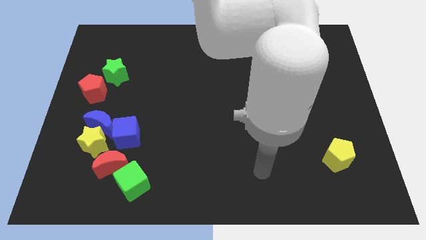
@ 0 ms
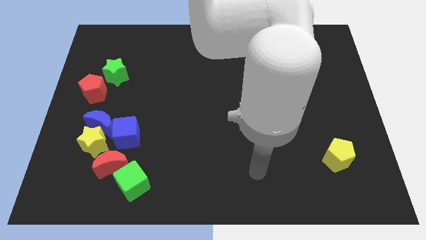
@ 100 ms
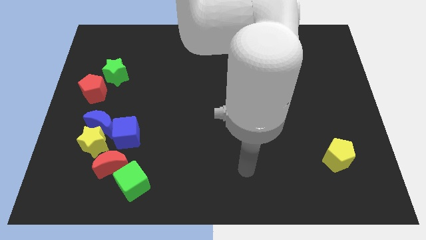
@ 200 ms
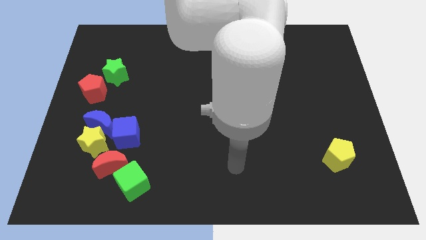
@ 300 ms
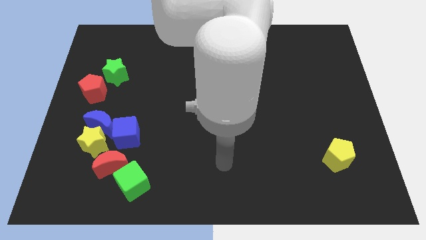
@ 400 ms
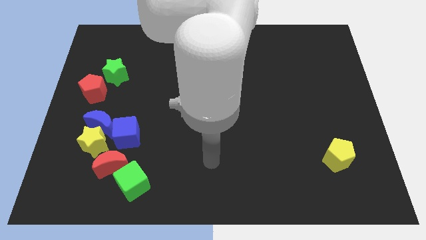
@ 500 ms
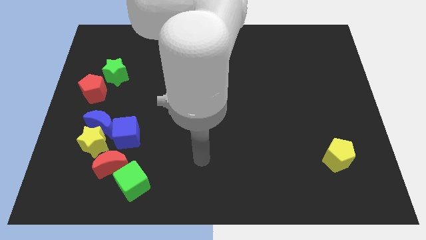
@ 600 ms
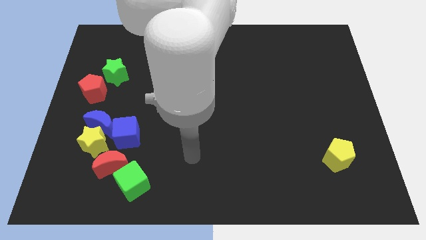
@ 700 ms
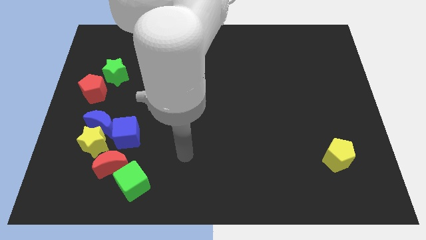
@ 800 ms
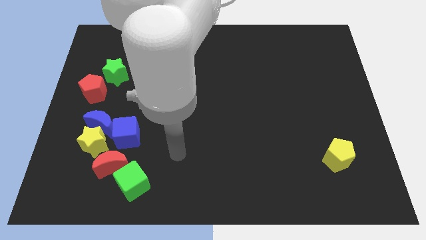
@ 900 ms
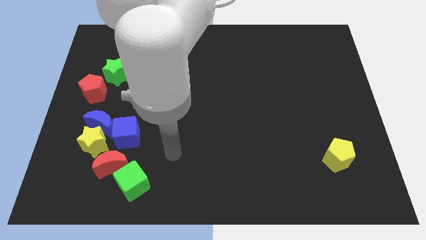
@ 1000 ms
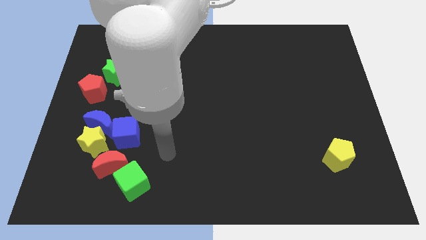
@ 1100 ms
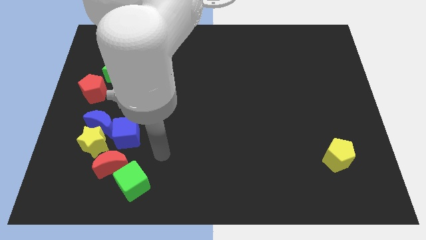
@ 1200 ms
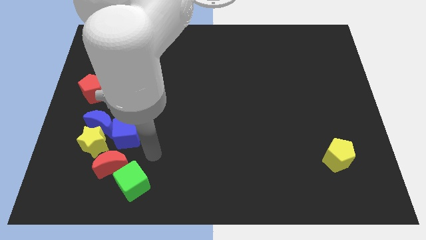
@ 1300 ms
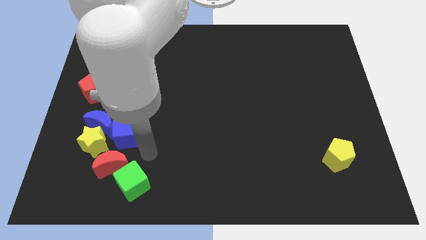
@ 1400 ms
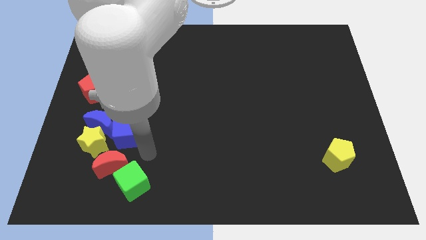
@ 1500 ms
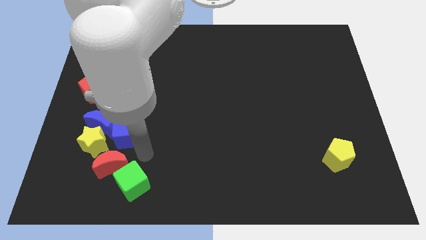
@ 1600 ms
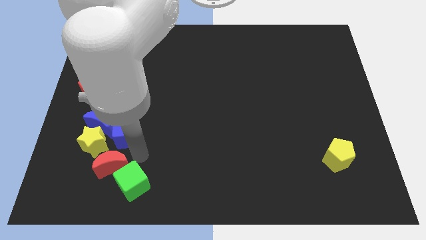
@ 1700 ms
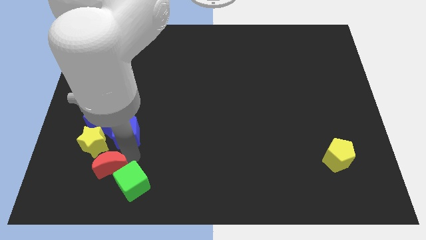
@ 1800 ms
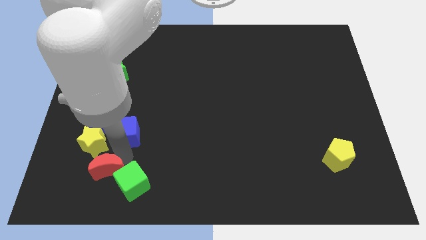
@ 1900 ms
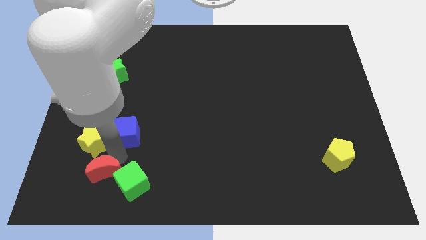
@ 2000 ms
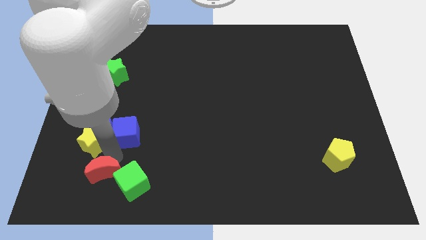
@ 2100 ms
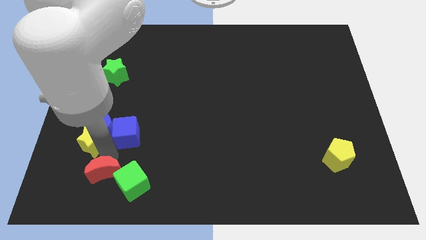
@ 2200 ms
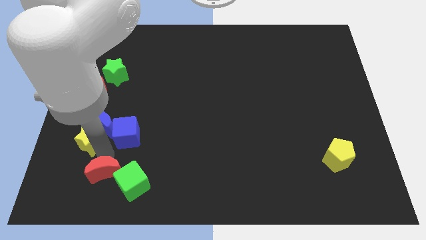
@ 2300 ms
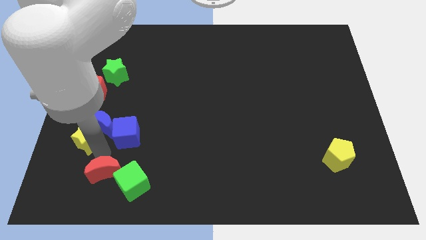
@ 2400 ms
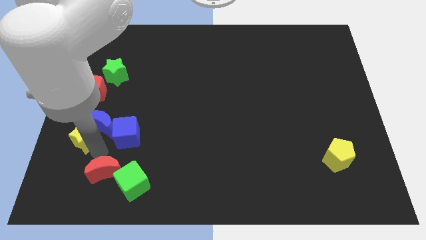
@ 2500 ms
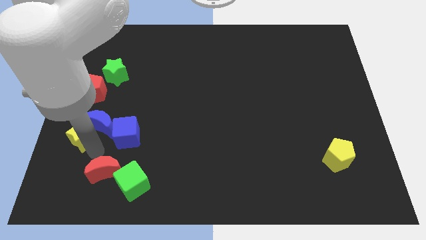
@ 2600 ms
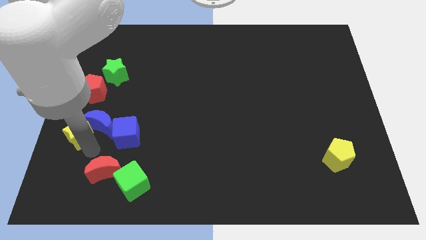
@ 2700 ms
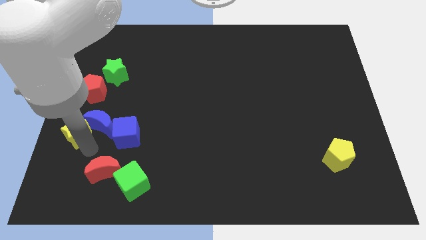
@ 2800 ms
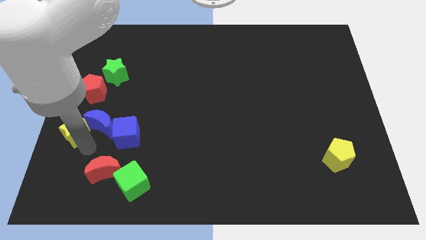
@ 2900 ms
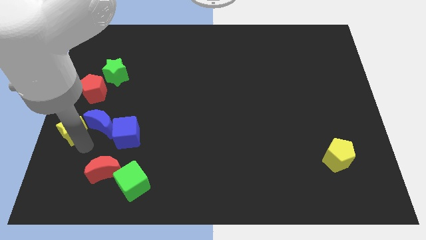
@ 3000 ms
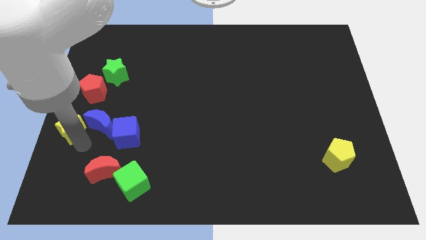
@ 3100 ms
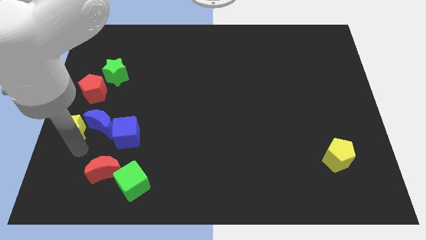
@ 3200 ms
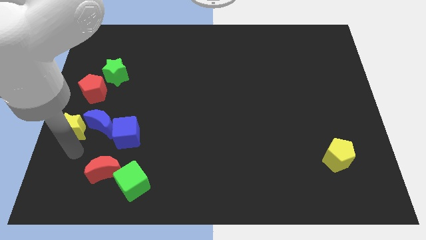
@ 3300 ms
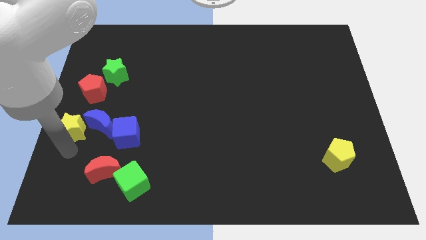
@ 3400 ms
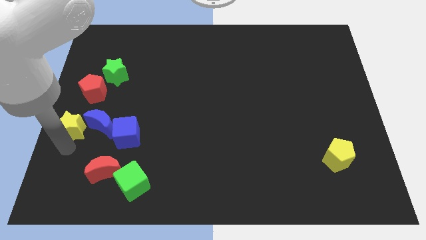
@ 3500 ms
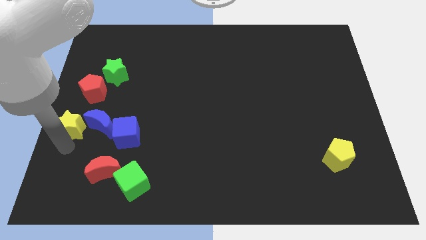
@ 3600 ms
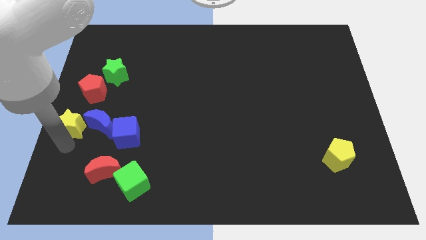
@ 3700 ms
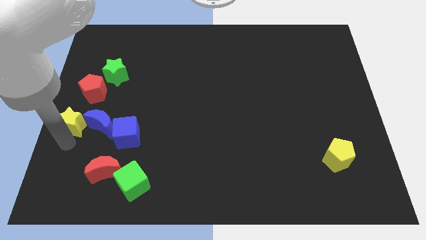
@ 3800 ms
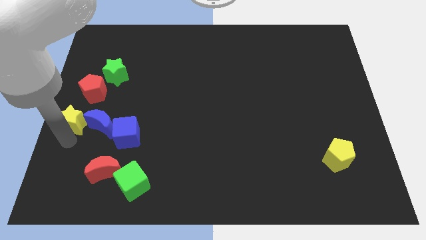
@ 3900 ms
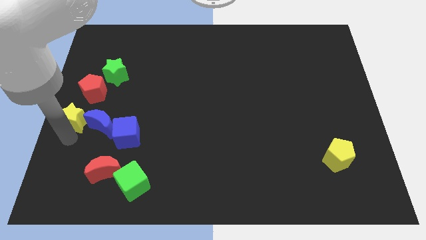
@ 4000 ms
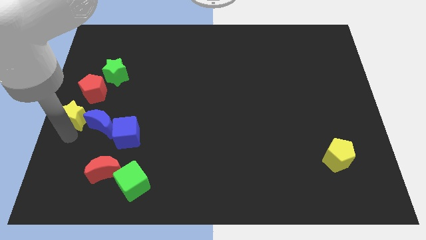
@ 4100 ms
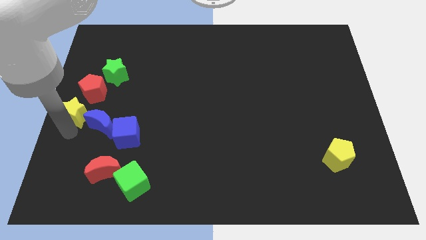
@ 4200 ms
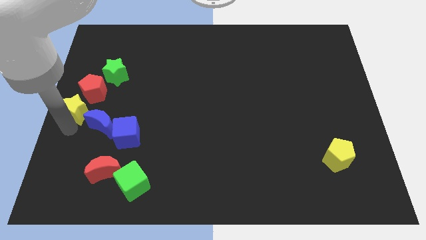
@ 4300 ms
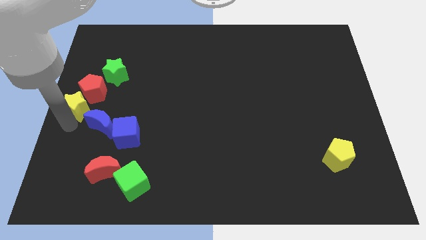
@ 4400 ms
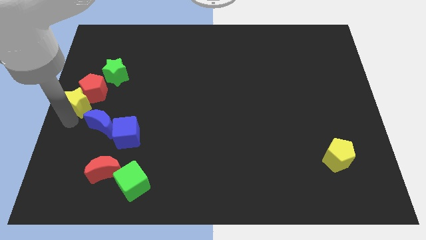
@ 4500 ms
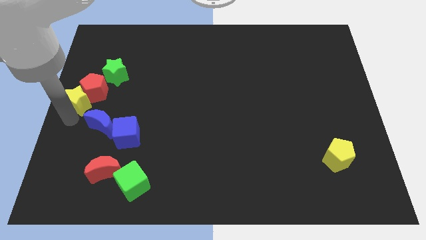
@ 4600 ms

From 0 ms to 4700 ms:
move the yellow star next to the red pentagon

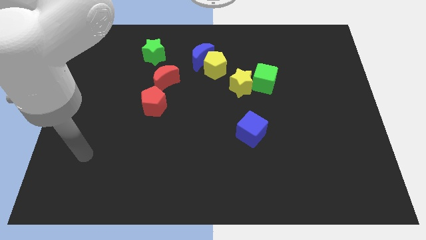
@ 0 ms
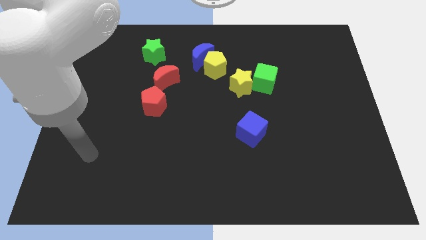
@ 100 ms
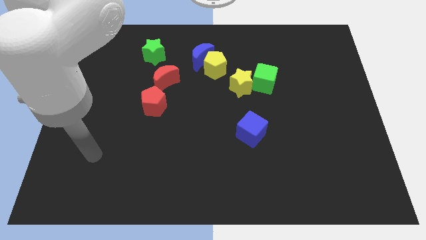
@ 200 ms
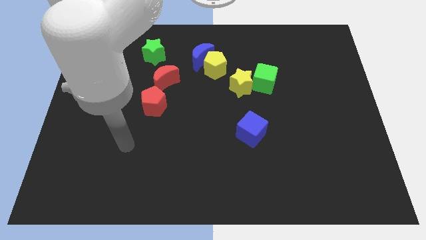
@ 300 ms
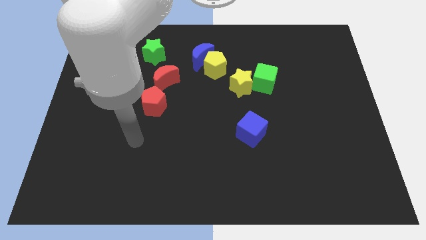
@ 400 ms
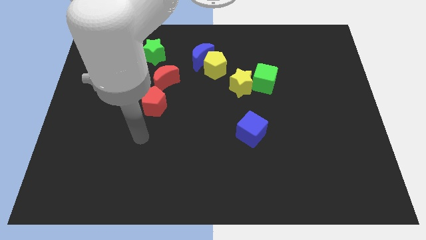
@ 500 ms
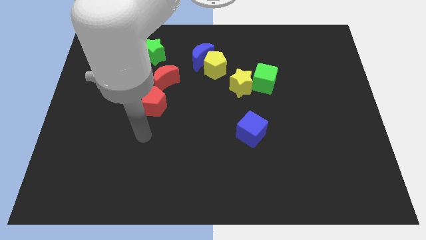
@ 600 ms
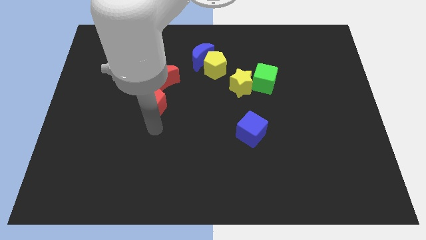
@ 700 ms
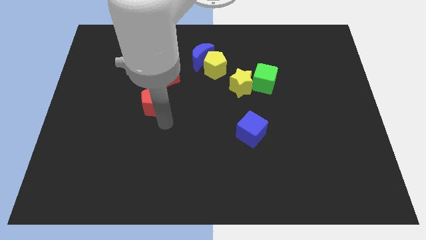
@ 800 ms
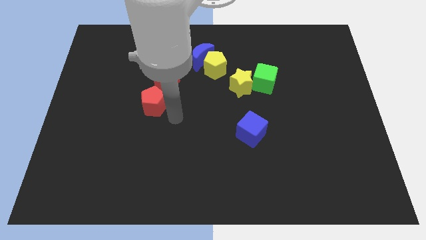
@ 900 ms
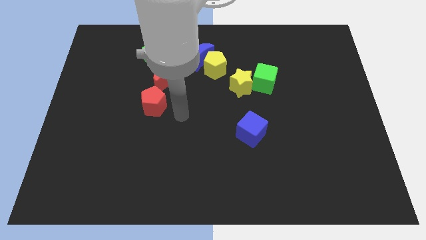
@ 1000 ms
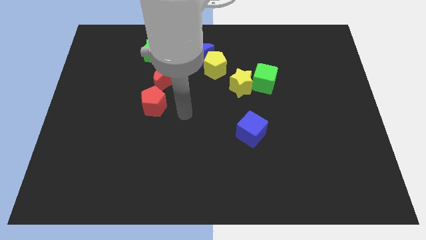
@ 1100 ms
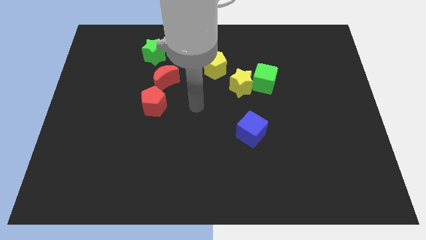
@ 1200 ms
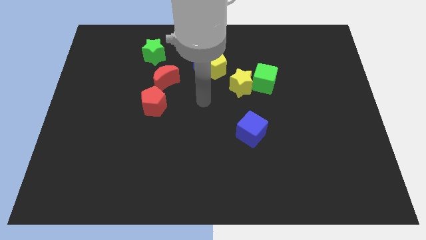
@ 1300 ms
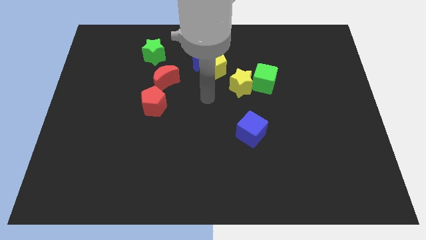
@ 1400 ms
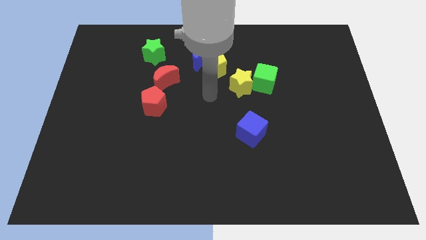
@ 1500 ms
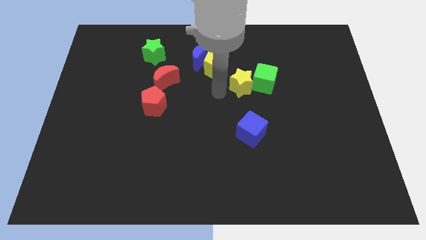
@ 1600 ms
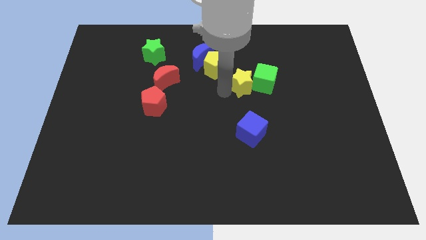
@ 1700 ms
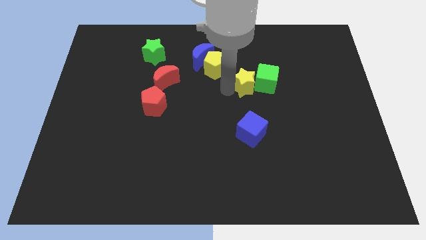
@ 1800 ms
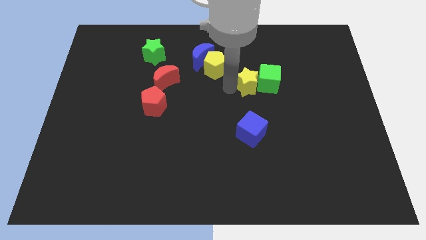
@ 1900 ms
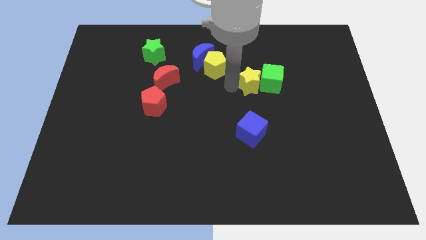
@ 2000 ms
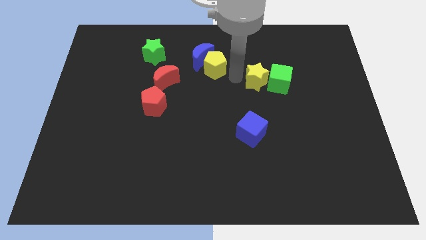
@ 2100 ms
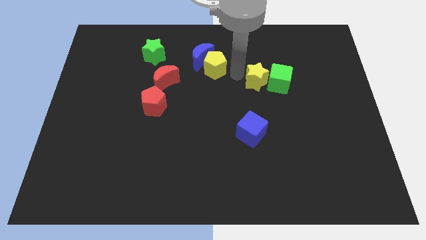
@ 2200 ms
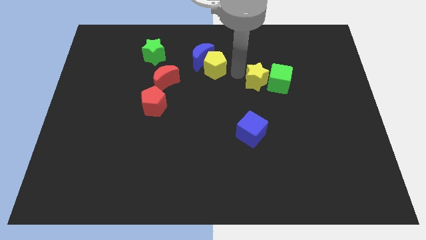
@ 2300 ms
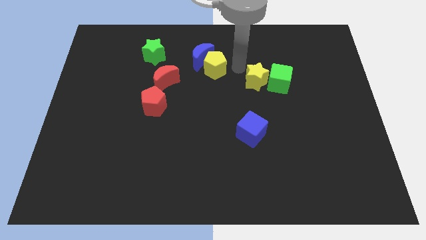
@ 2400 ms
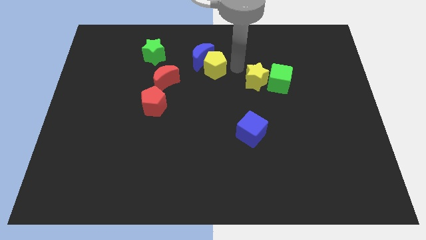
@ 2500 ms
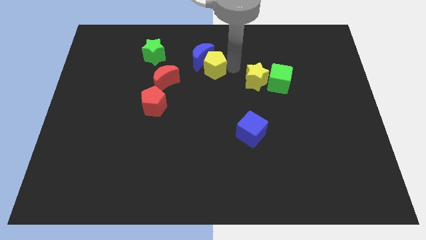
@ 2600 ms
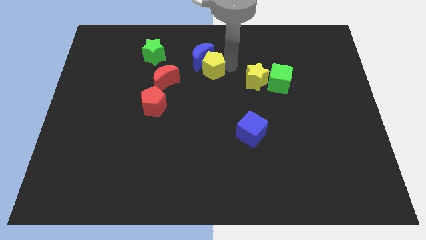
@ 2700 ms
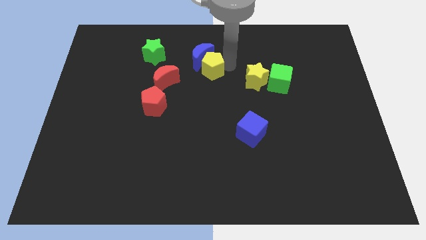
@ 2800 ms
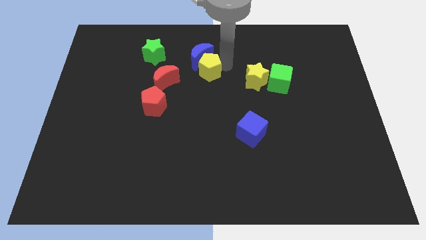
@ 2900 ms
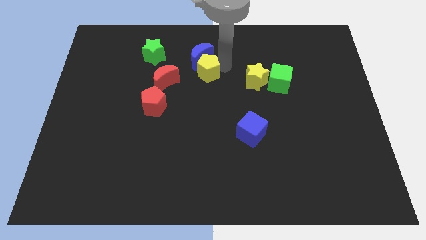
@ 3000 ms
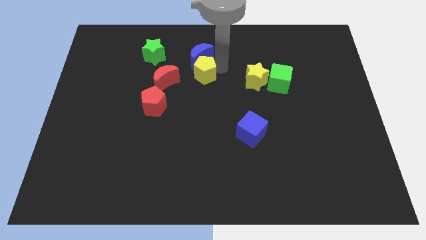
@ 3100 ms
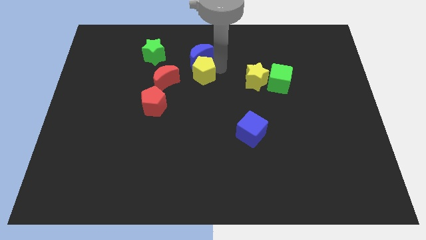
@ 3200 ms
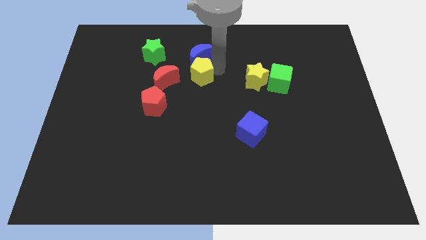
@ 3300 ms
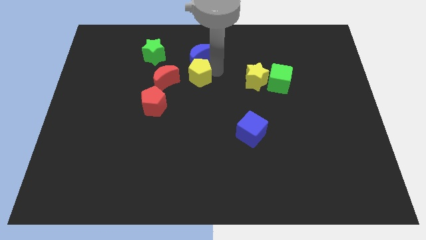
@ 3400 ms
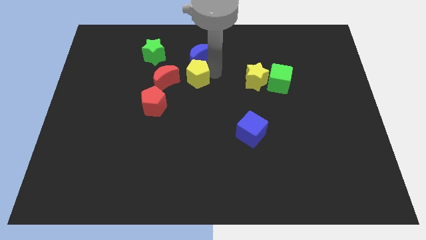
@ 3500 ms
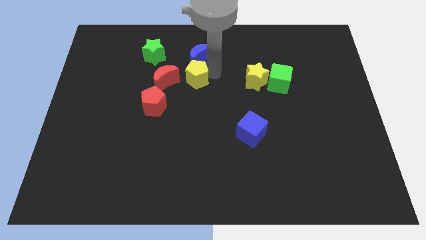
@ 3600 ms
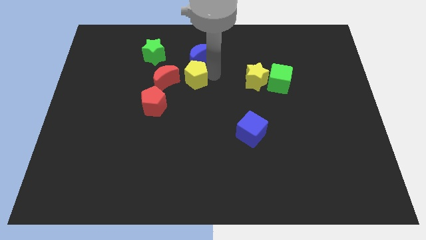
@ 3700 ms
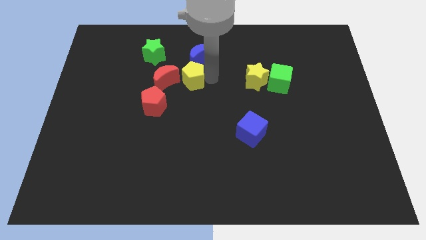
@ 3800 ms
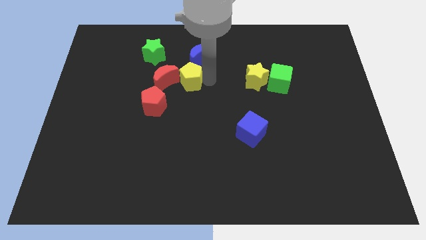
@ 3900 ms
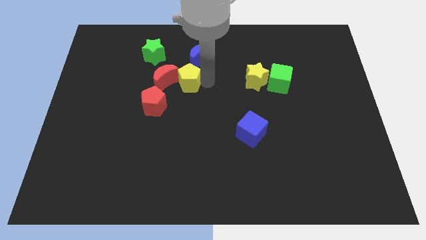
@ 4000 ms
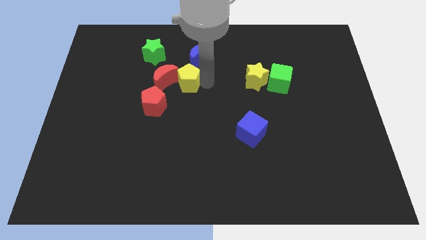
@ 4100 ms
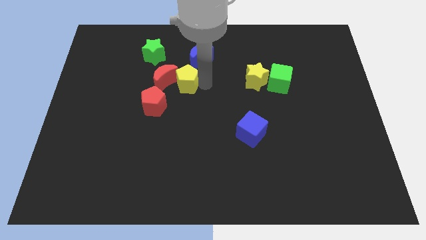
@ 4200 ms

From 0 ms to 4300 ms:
put the yellow pentagon next to the red moon
